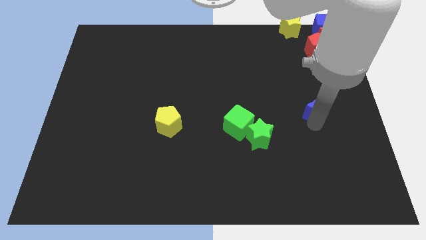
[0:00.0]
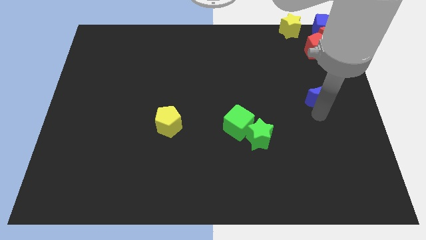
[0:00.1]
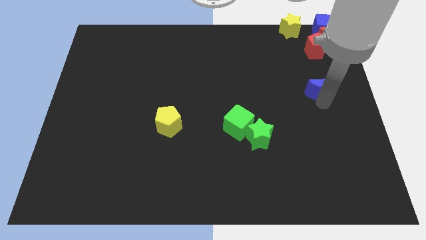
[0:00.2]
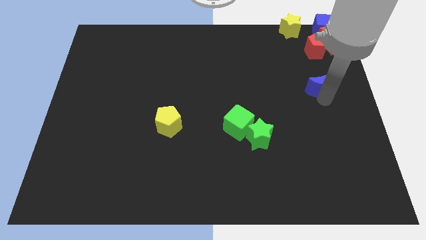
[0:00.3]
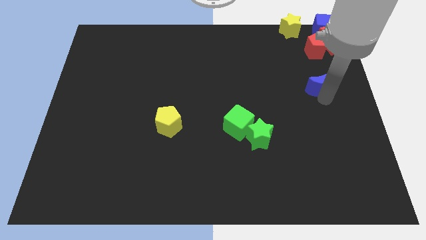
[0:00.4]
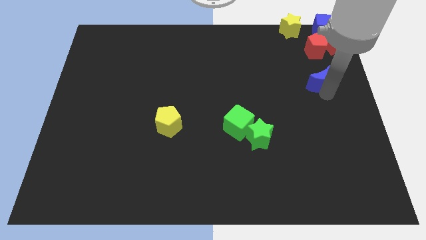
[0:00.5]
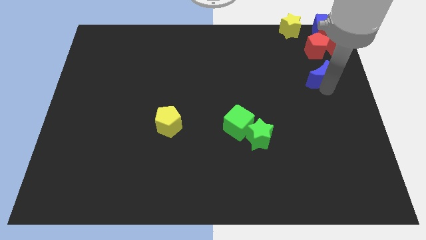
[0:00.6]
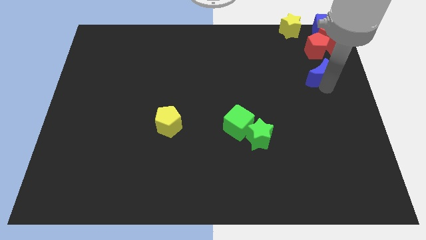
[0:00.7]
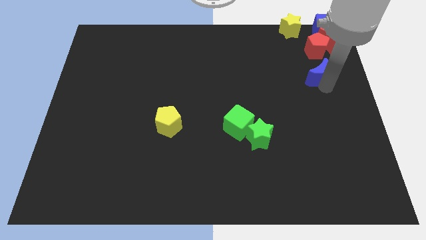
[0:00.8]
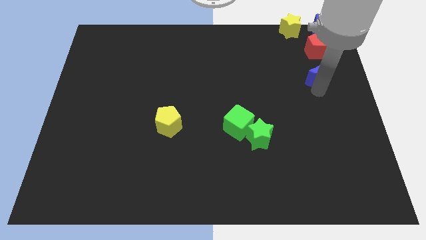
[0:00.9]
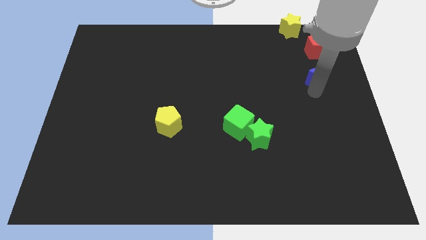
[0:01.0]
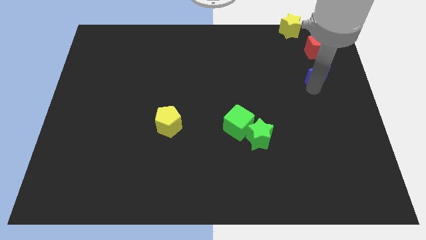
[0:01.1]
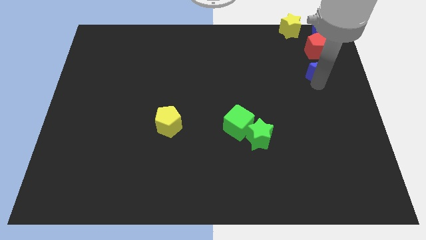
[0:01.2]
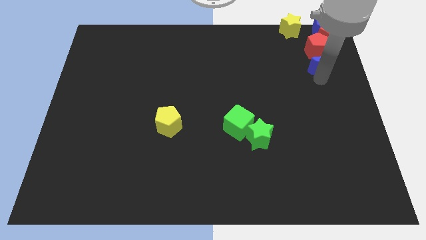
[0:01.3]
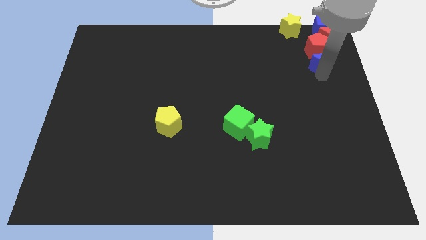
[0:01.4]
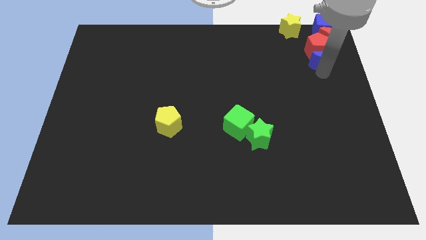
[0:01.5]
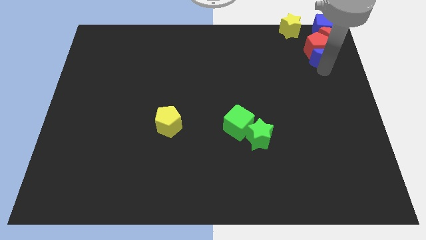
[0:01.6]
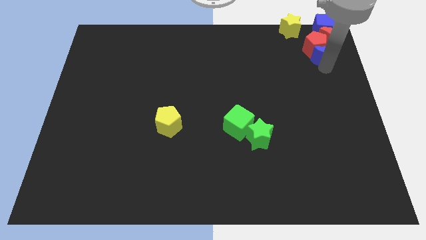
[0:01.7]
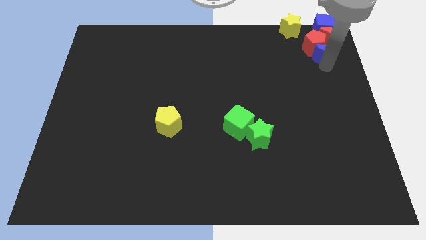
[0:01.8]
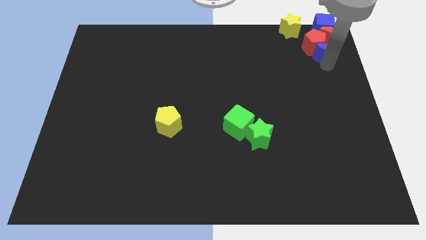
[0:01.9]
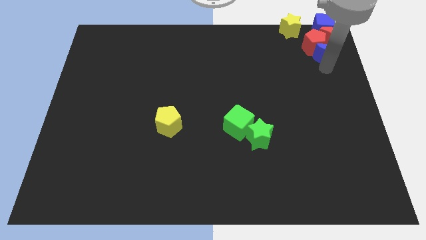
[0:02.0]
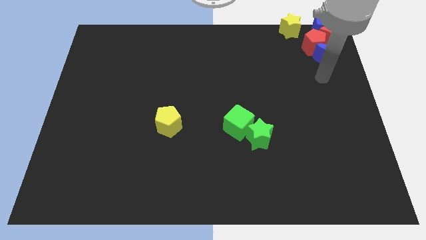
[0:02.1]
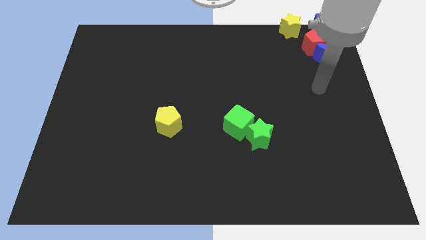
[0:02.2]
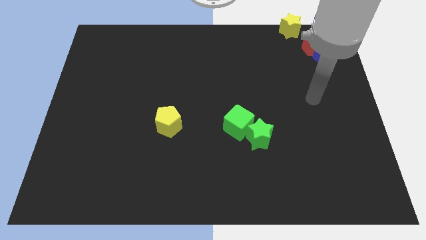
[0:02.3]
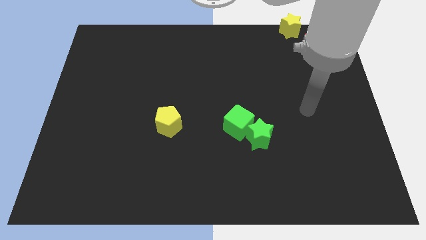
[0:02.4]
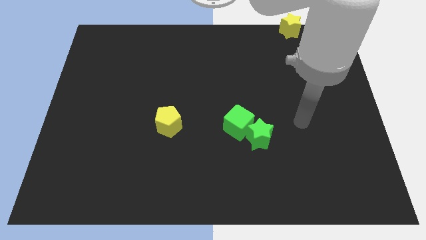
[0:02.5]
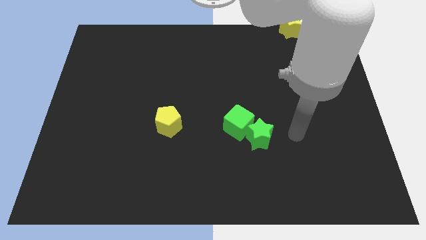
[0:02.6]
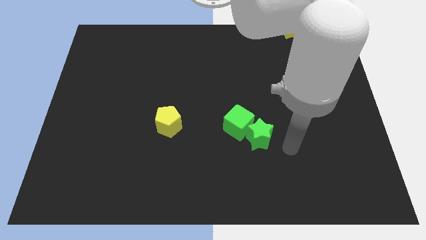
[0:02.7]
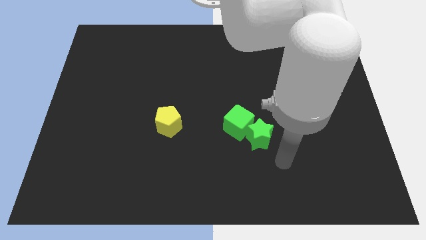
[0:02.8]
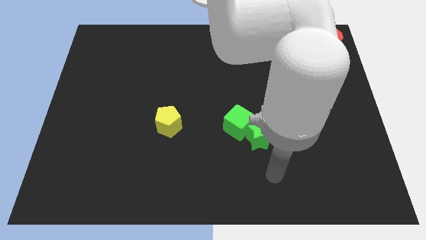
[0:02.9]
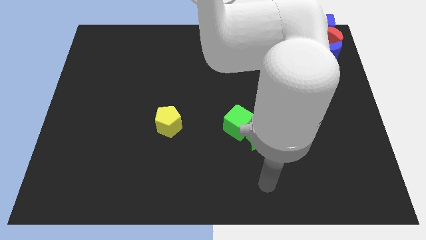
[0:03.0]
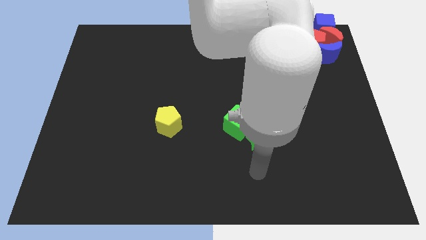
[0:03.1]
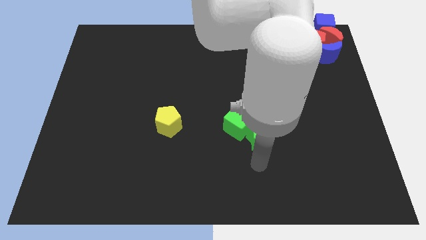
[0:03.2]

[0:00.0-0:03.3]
move blue moon below the red blocks

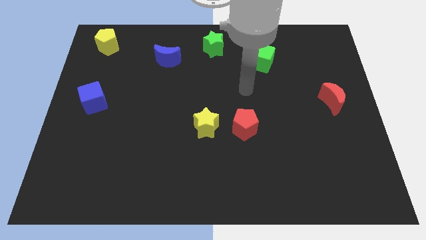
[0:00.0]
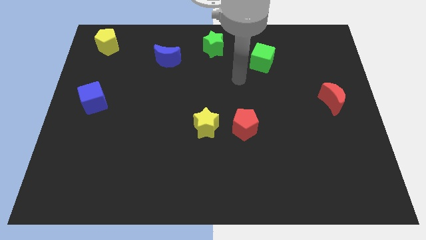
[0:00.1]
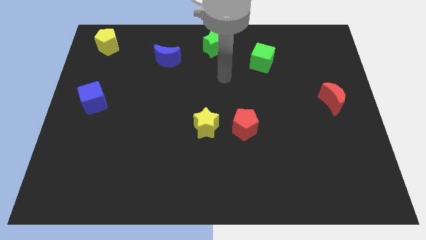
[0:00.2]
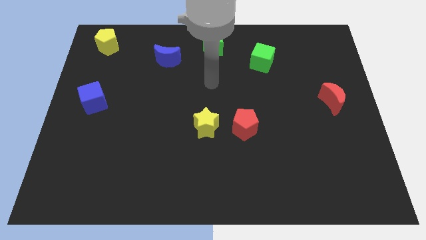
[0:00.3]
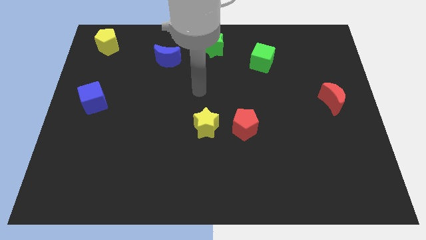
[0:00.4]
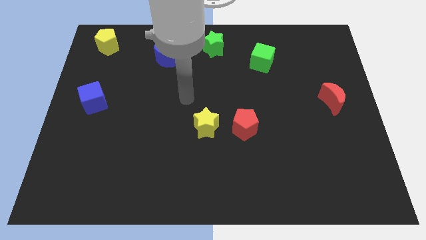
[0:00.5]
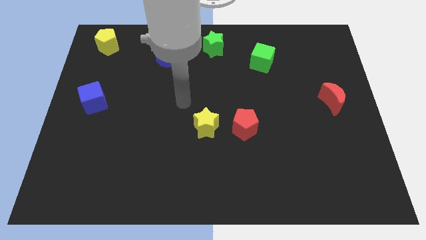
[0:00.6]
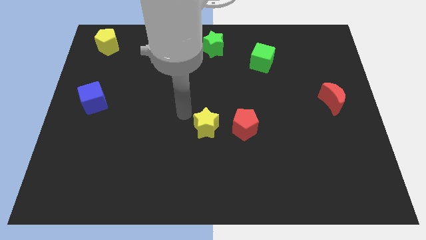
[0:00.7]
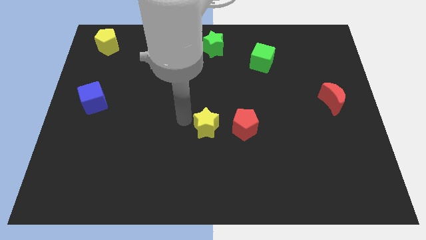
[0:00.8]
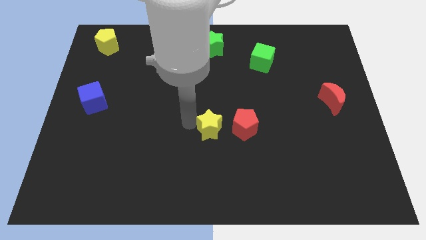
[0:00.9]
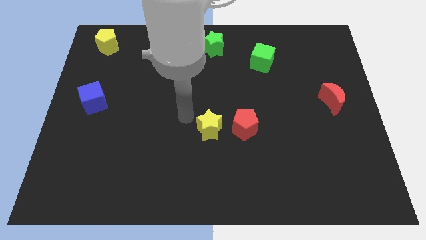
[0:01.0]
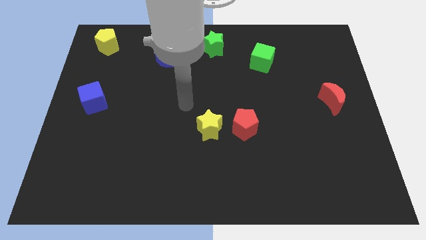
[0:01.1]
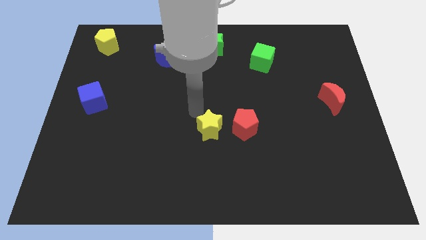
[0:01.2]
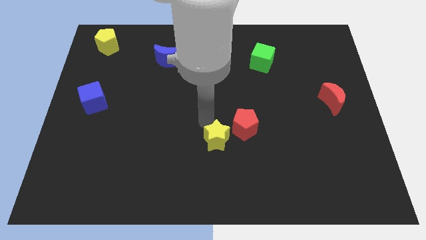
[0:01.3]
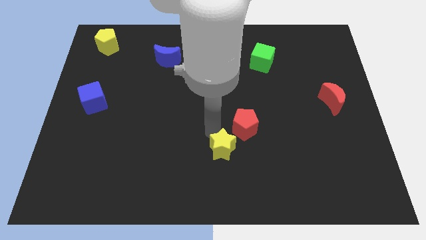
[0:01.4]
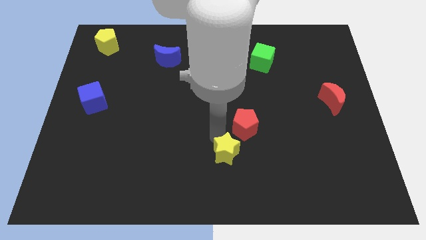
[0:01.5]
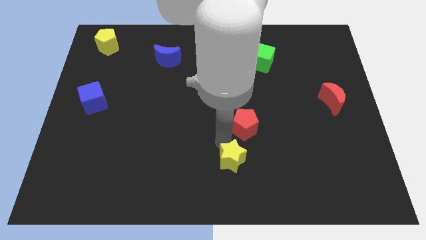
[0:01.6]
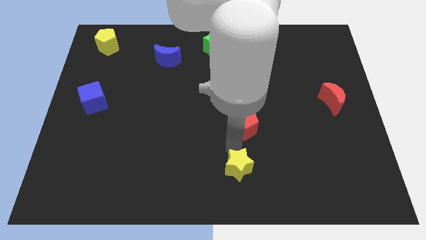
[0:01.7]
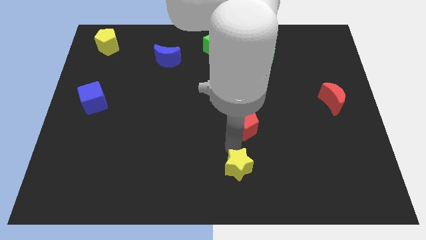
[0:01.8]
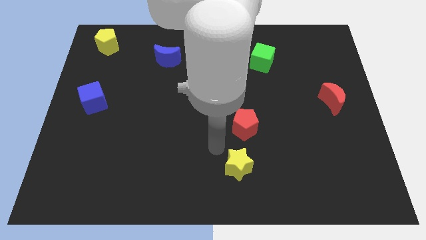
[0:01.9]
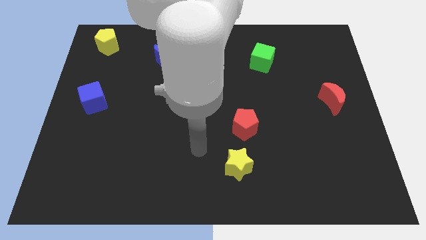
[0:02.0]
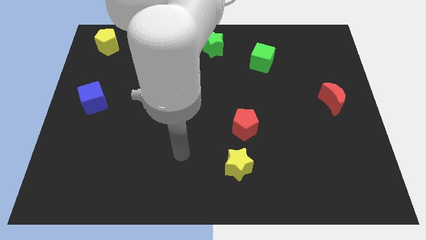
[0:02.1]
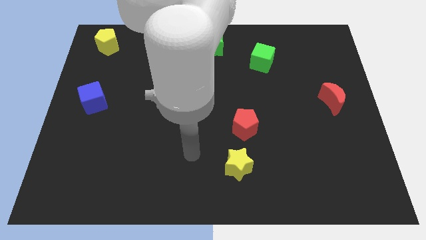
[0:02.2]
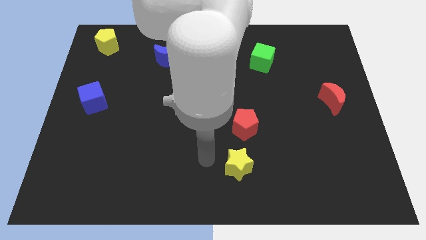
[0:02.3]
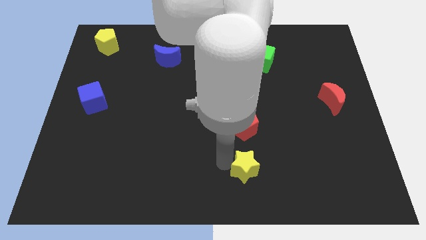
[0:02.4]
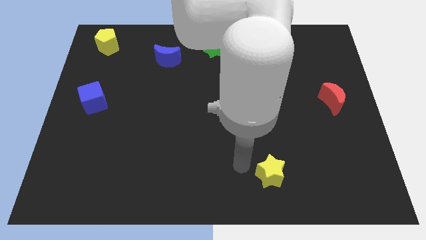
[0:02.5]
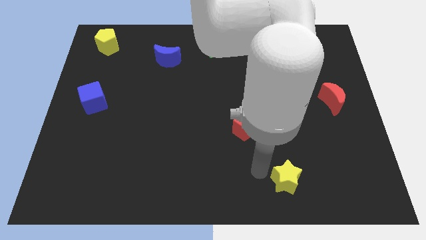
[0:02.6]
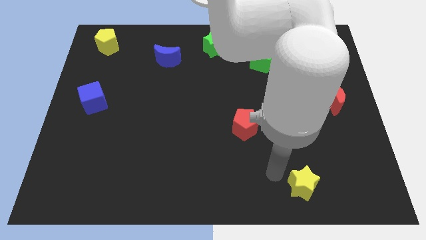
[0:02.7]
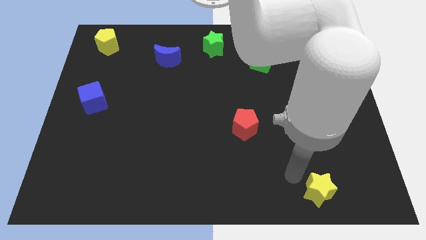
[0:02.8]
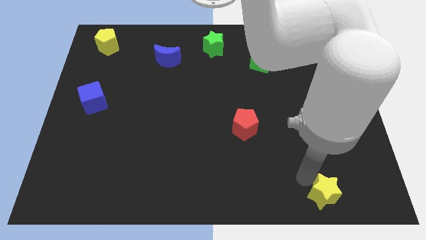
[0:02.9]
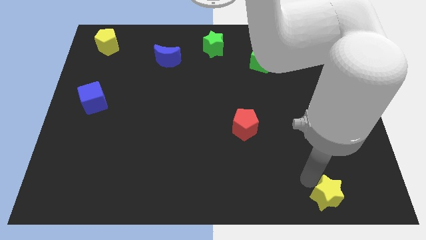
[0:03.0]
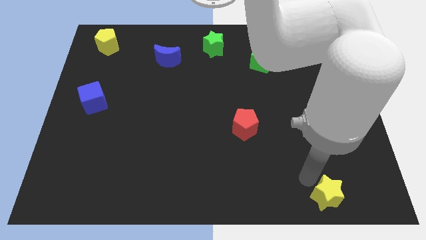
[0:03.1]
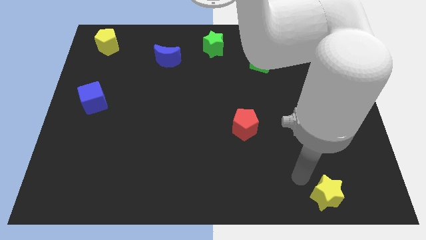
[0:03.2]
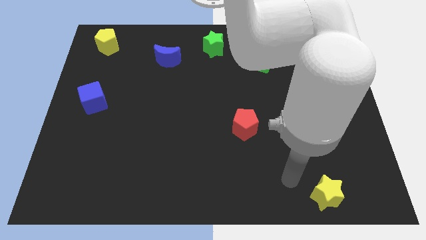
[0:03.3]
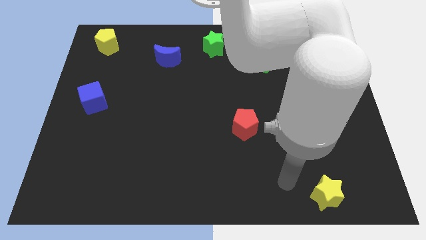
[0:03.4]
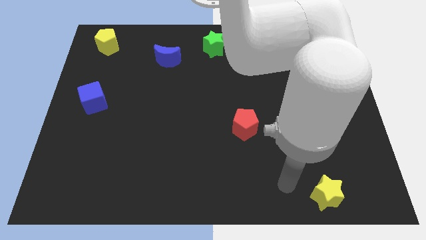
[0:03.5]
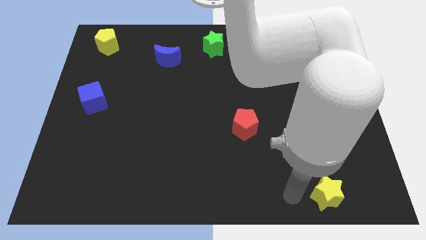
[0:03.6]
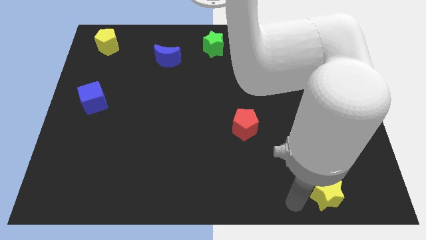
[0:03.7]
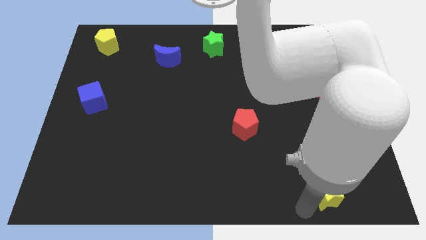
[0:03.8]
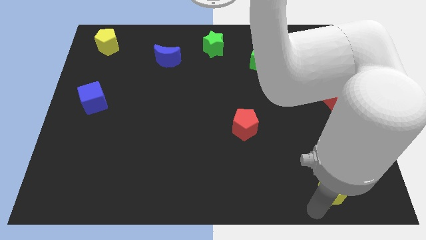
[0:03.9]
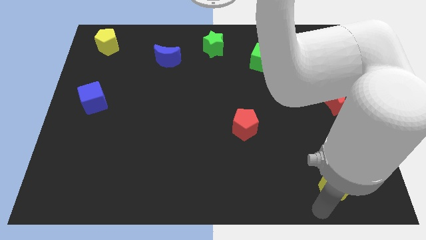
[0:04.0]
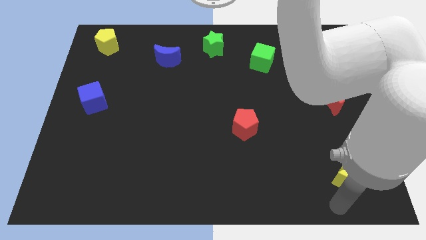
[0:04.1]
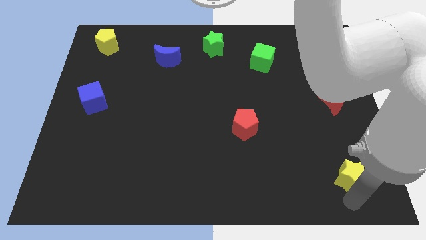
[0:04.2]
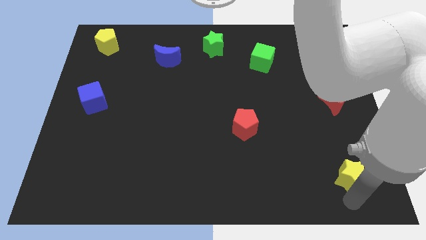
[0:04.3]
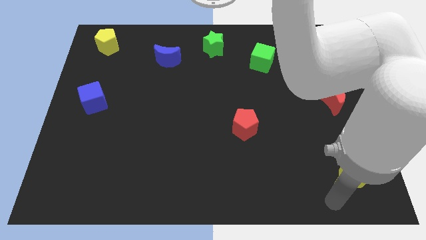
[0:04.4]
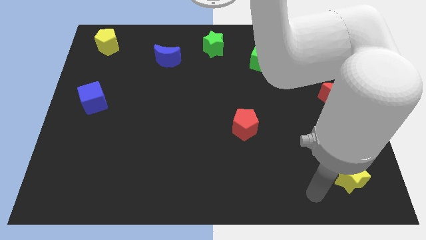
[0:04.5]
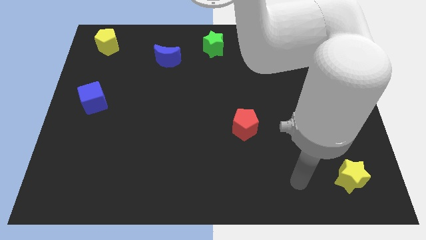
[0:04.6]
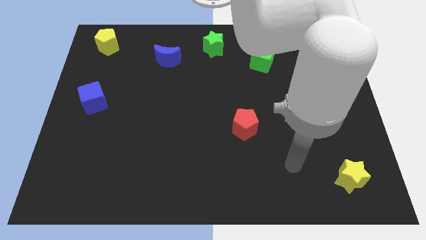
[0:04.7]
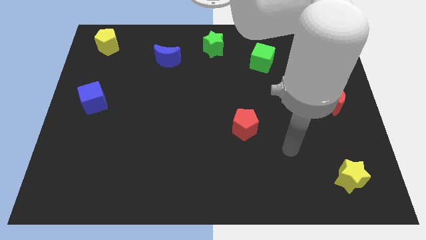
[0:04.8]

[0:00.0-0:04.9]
move the yellow star to the right bottom vertically to the red crescent

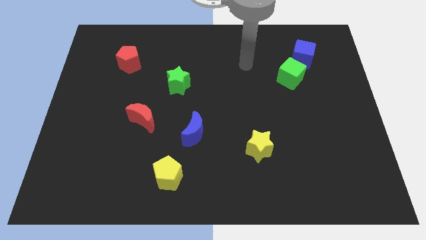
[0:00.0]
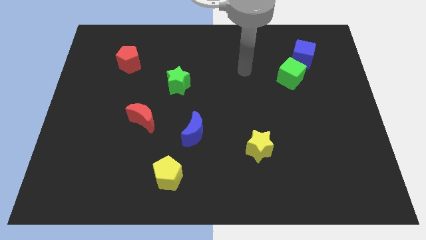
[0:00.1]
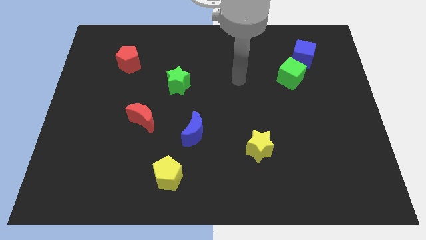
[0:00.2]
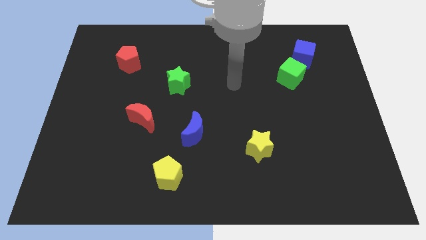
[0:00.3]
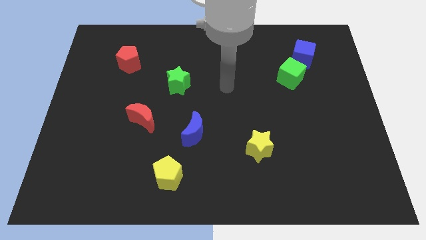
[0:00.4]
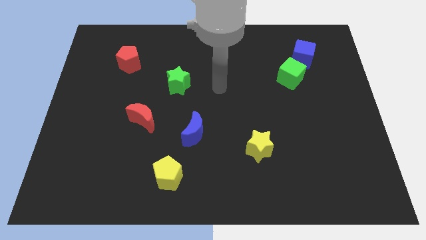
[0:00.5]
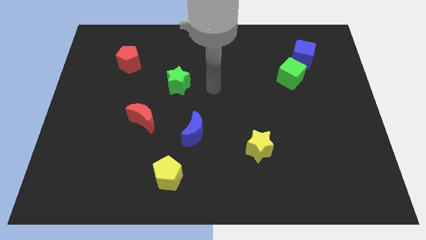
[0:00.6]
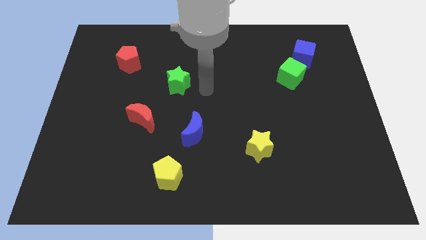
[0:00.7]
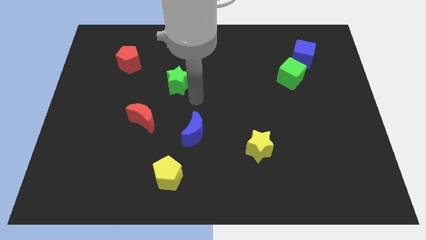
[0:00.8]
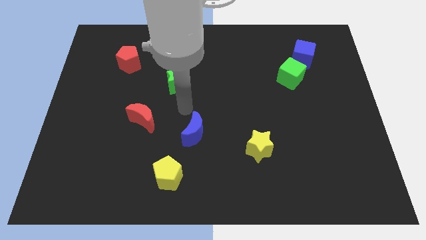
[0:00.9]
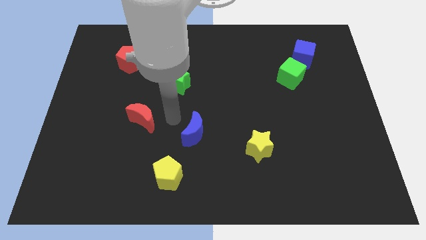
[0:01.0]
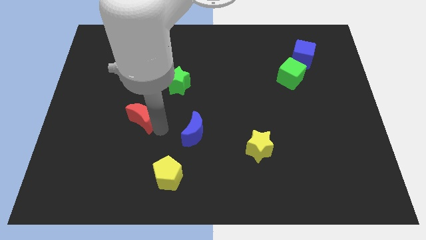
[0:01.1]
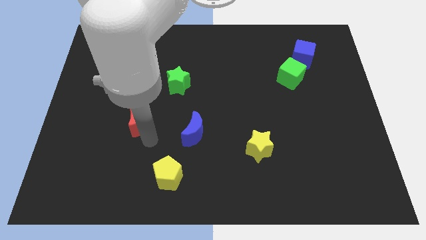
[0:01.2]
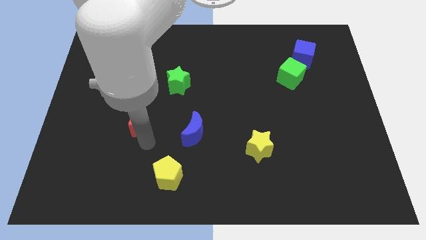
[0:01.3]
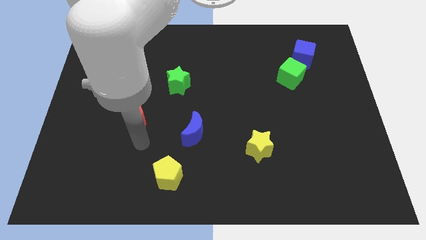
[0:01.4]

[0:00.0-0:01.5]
move the red moon slightly to the left
